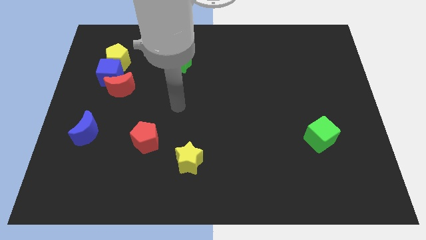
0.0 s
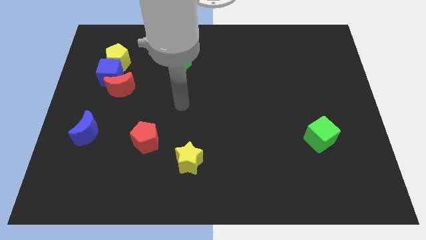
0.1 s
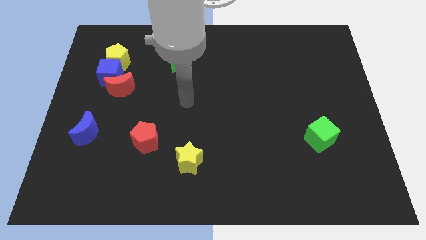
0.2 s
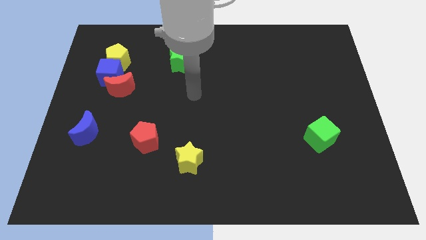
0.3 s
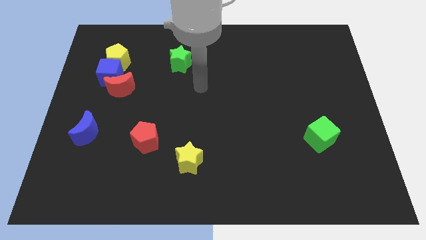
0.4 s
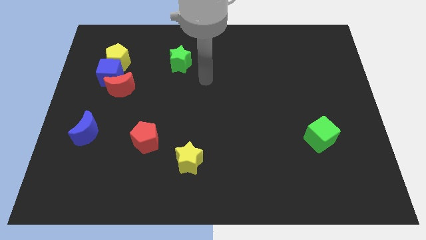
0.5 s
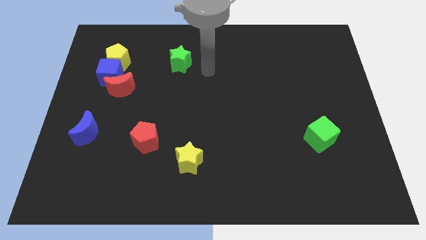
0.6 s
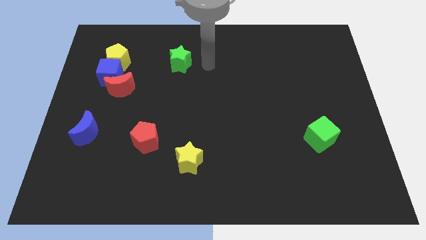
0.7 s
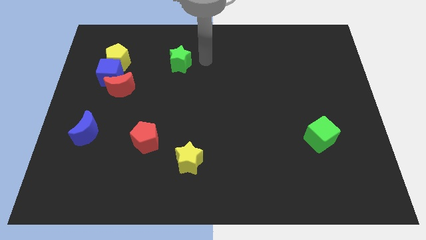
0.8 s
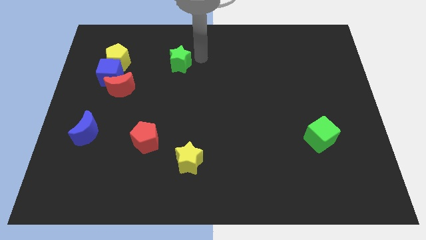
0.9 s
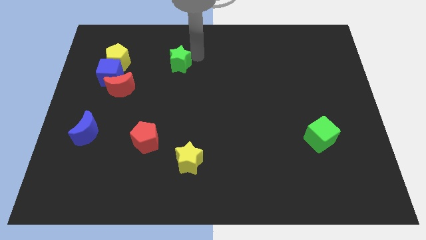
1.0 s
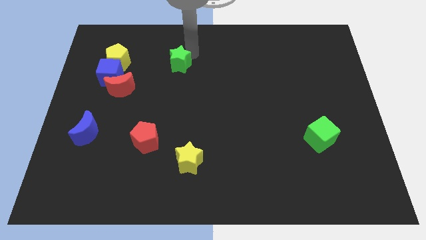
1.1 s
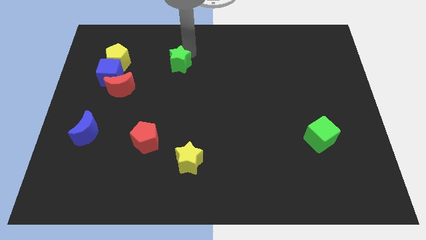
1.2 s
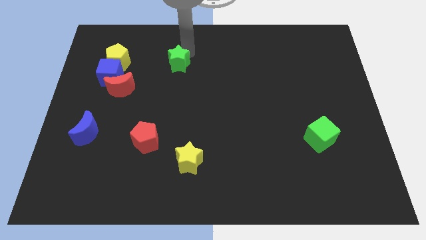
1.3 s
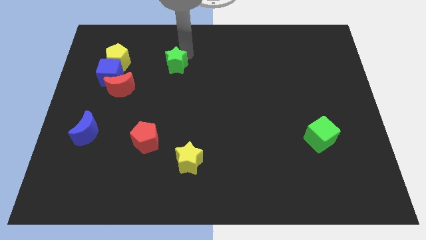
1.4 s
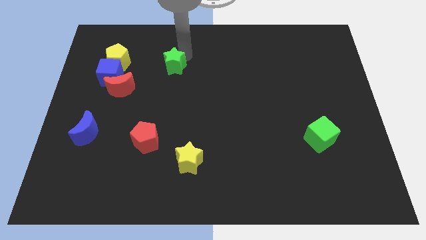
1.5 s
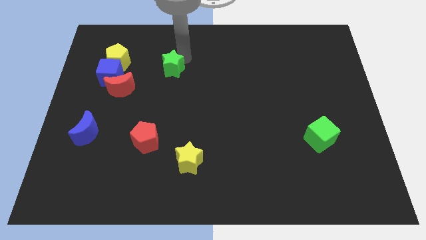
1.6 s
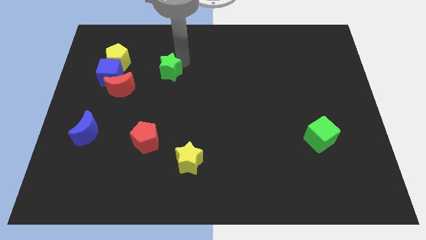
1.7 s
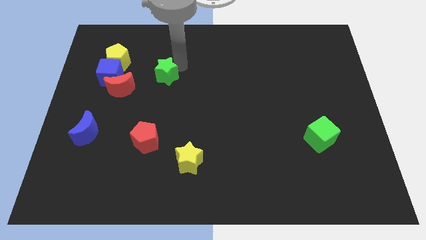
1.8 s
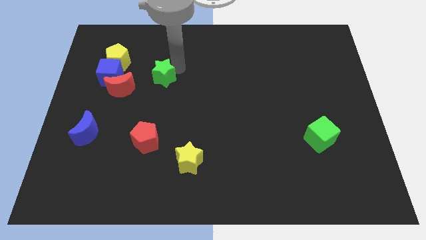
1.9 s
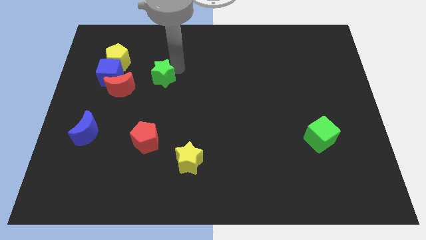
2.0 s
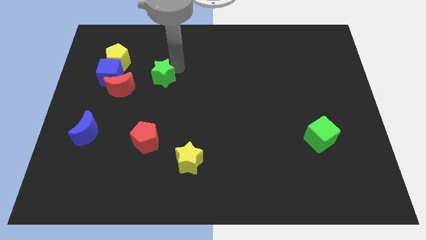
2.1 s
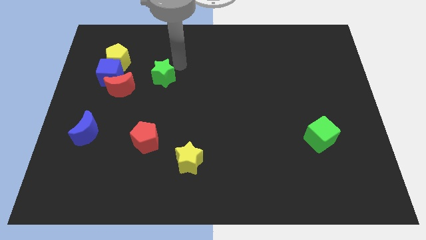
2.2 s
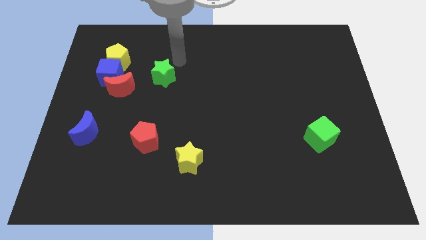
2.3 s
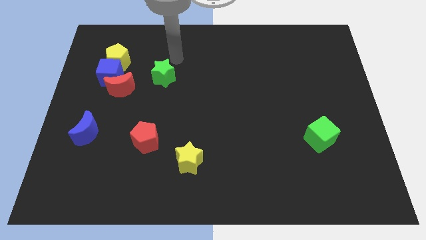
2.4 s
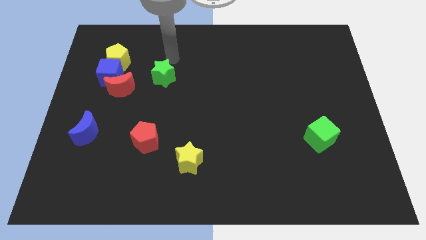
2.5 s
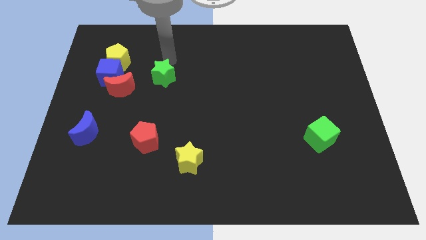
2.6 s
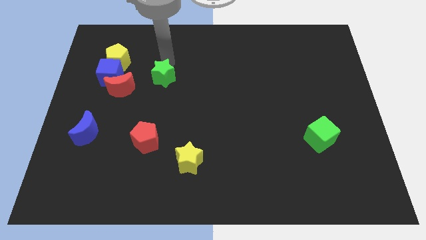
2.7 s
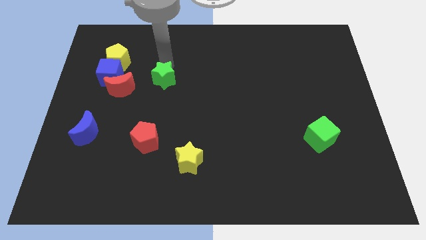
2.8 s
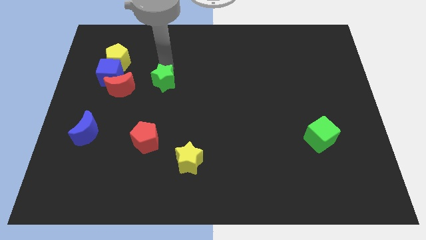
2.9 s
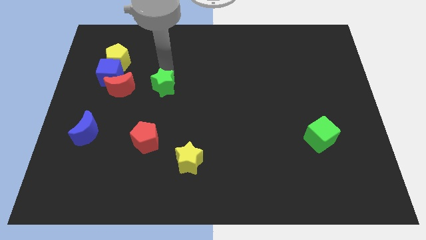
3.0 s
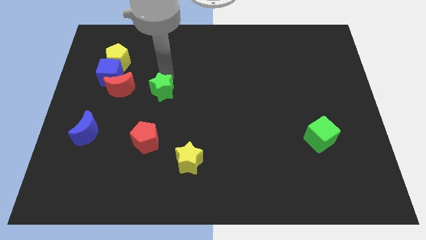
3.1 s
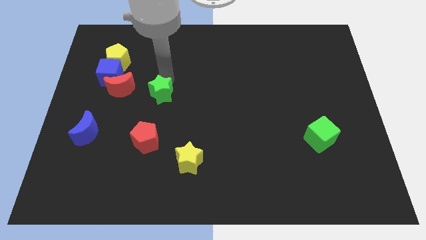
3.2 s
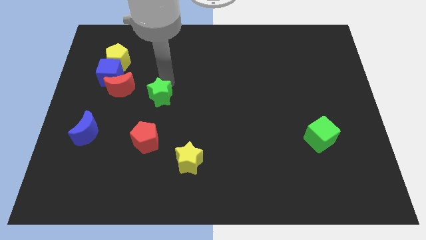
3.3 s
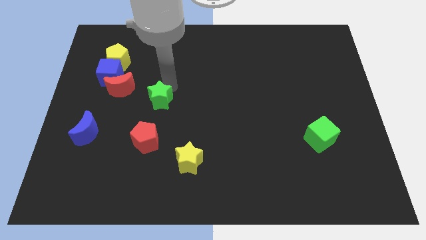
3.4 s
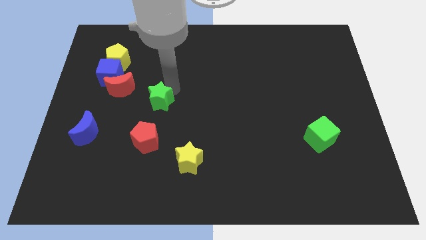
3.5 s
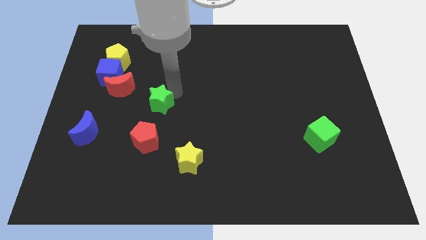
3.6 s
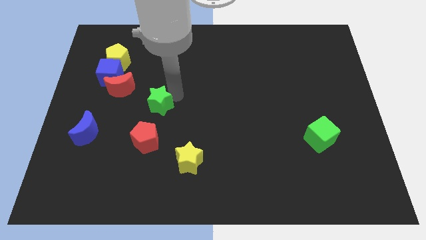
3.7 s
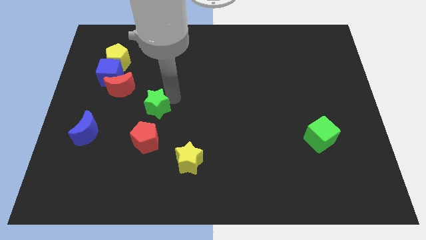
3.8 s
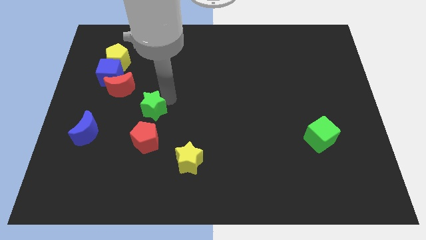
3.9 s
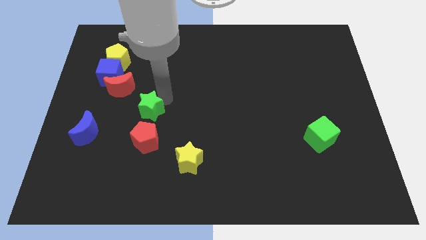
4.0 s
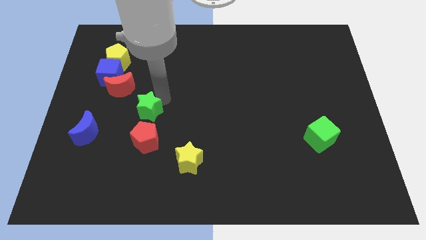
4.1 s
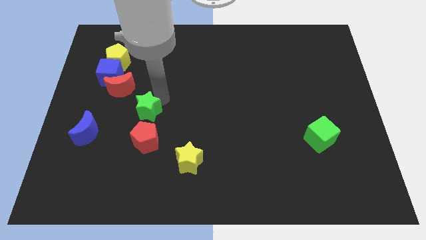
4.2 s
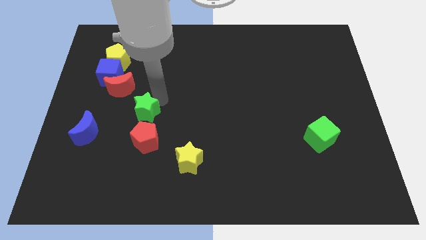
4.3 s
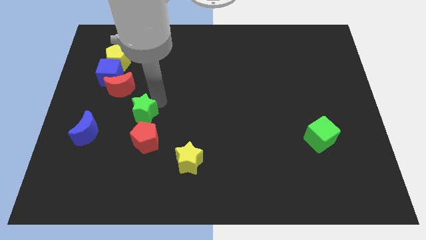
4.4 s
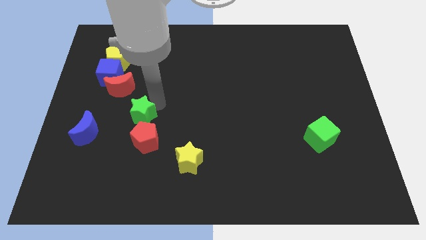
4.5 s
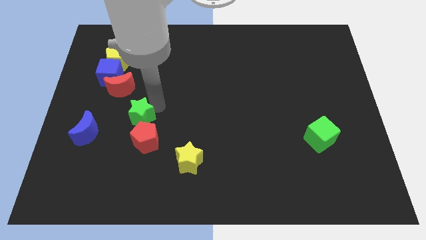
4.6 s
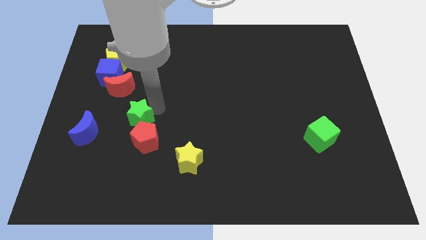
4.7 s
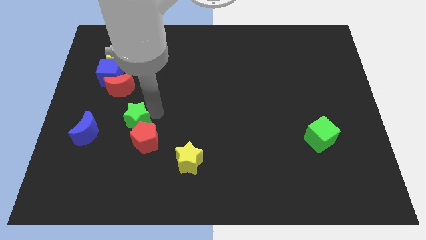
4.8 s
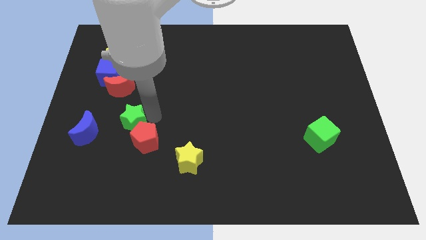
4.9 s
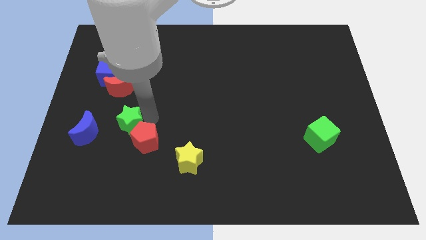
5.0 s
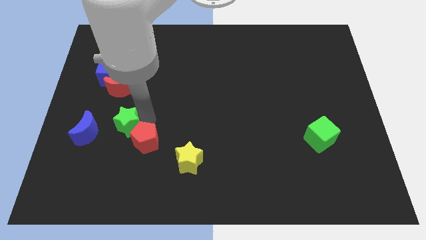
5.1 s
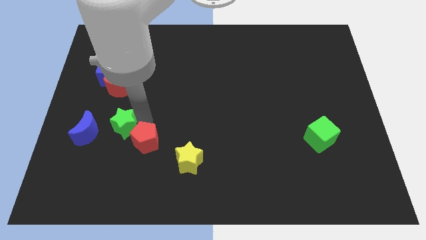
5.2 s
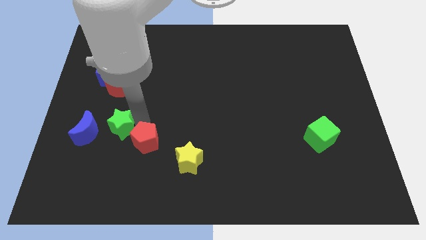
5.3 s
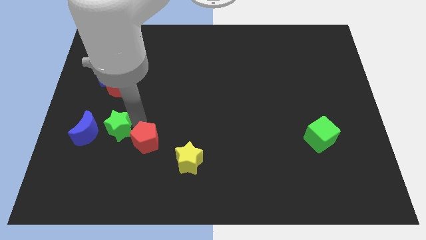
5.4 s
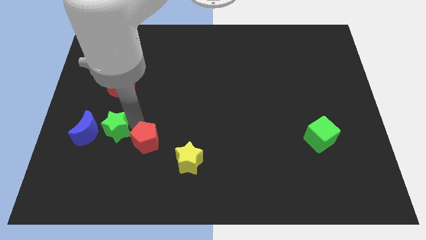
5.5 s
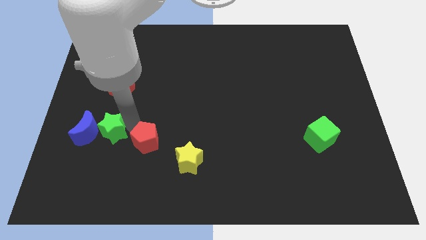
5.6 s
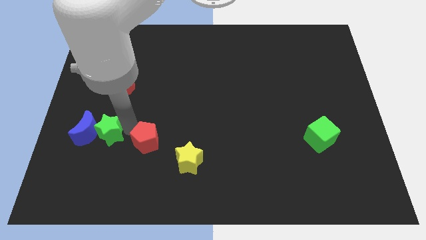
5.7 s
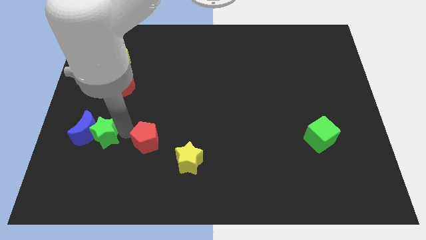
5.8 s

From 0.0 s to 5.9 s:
push the green star towards the blue moon

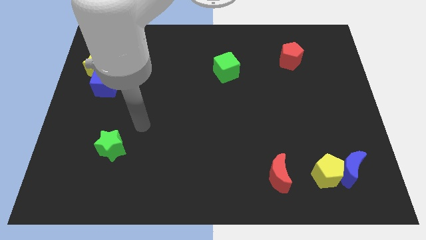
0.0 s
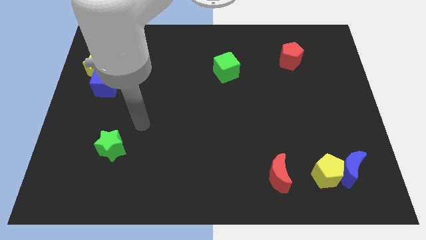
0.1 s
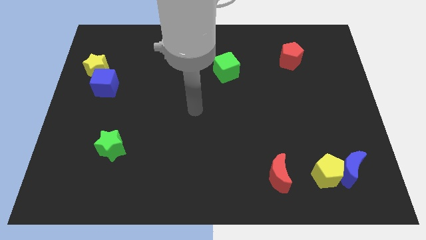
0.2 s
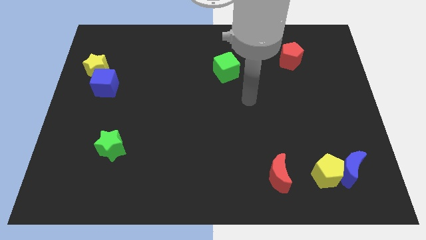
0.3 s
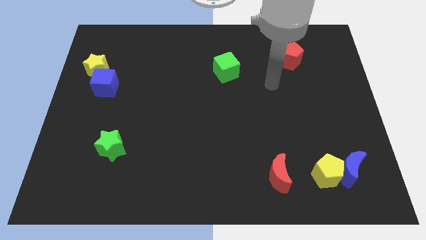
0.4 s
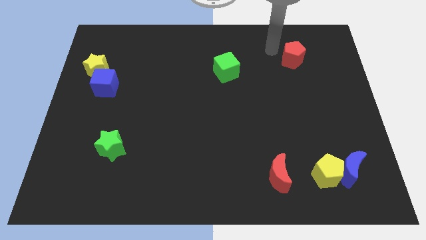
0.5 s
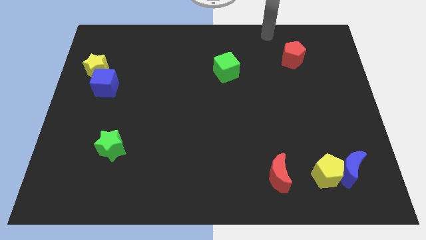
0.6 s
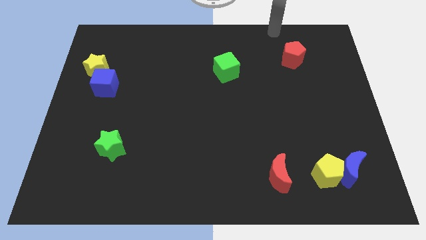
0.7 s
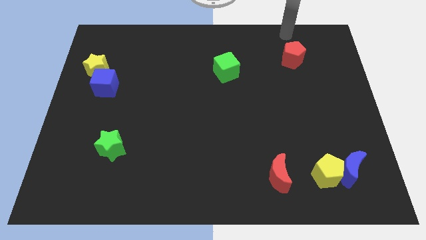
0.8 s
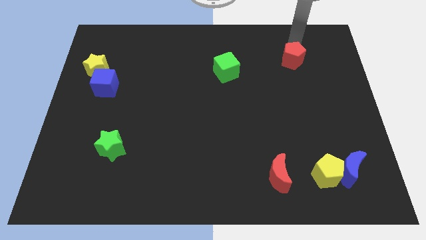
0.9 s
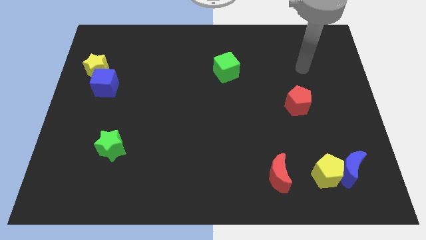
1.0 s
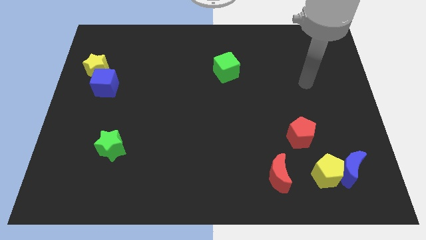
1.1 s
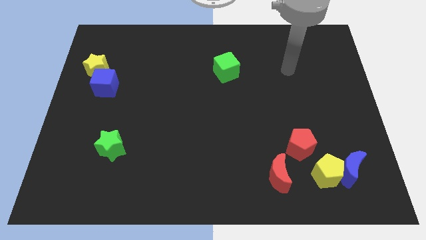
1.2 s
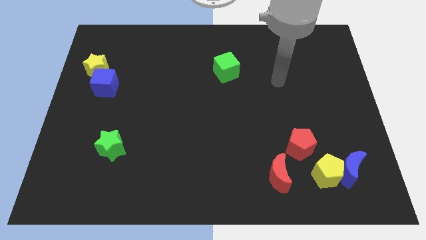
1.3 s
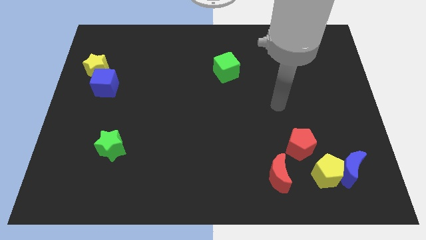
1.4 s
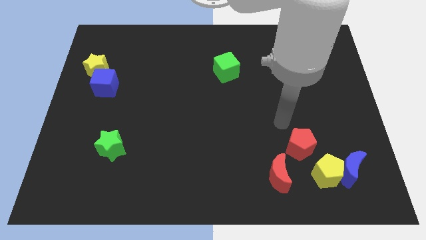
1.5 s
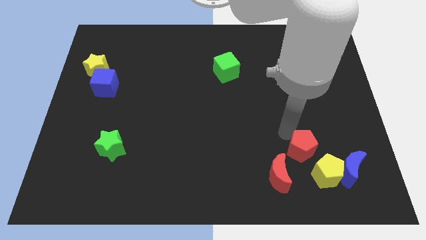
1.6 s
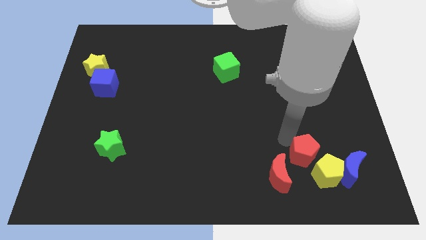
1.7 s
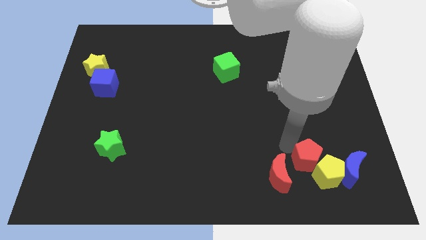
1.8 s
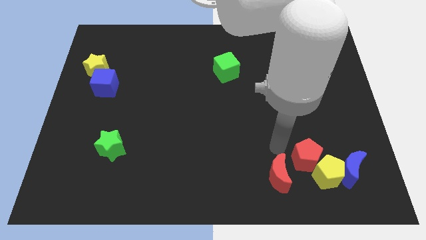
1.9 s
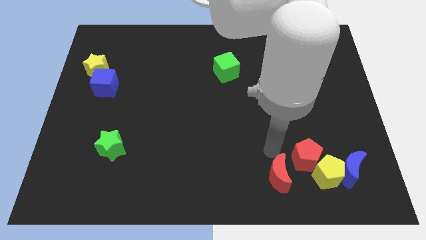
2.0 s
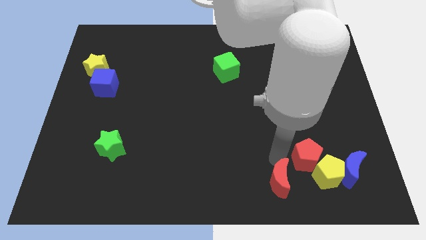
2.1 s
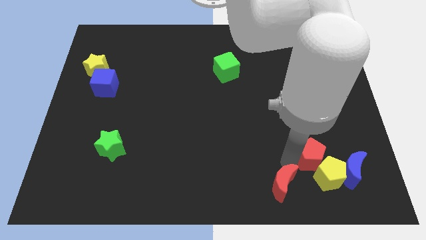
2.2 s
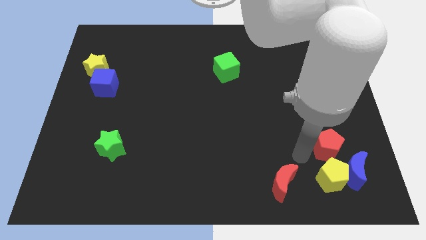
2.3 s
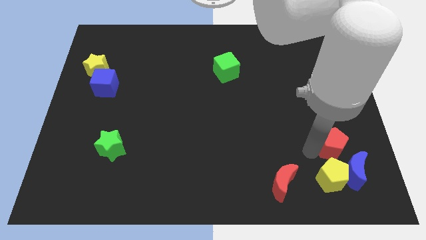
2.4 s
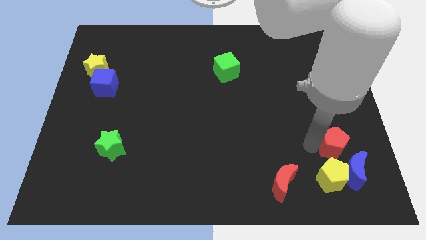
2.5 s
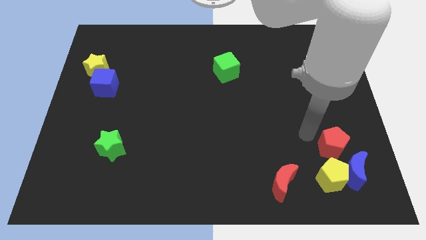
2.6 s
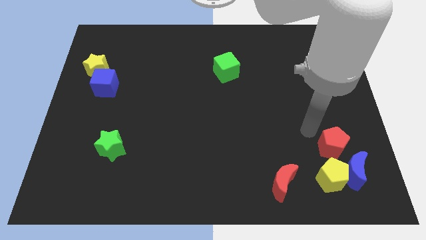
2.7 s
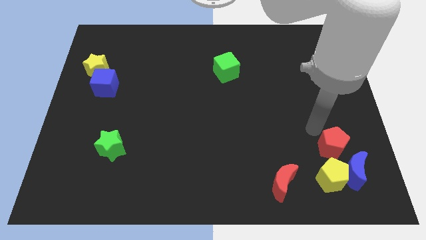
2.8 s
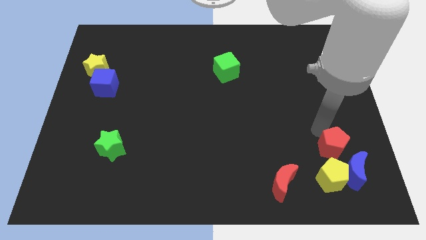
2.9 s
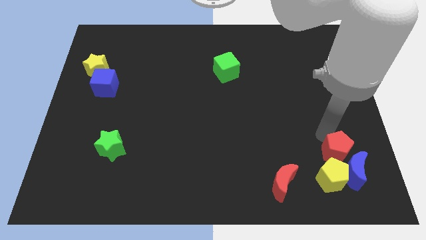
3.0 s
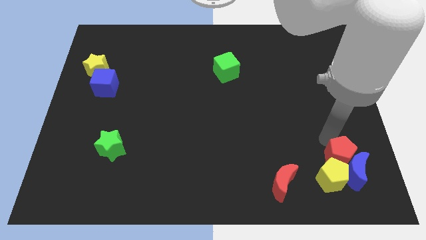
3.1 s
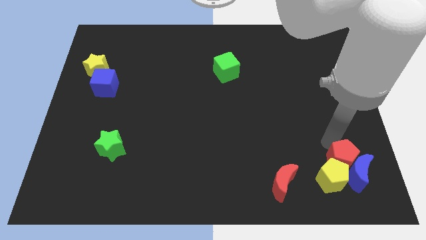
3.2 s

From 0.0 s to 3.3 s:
slide the red pentagon to the blue moon
